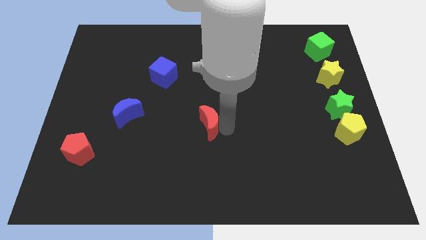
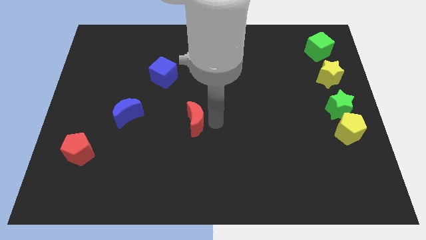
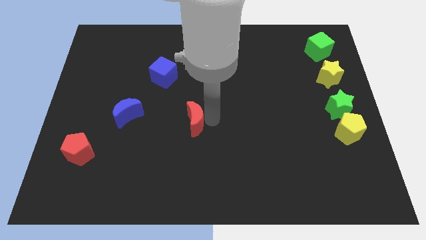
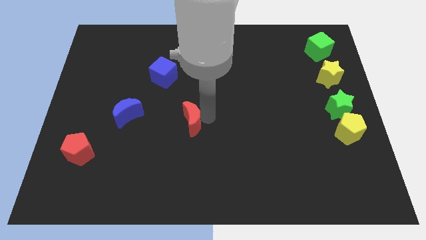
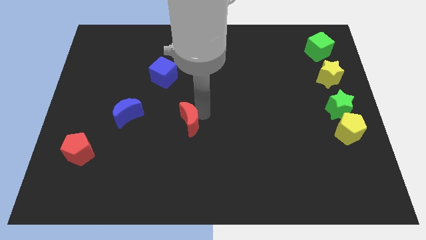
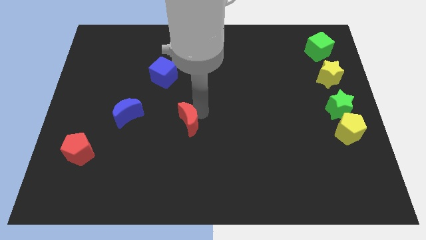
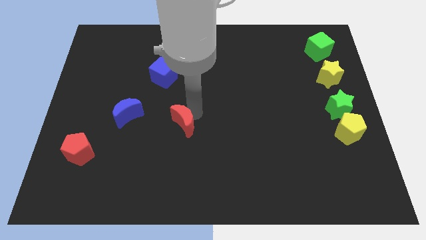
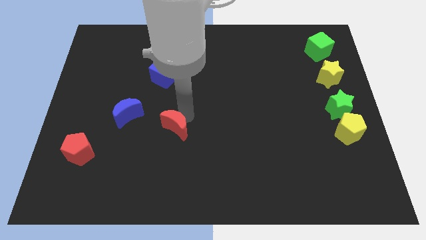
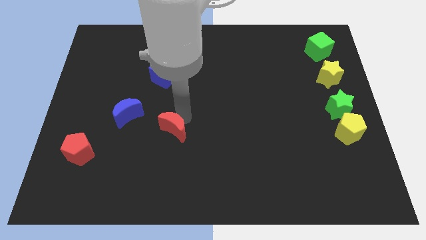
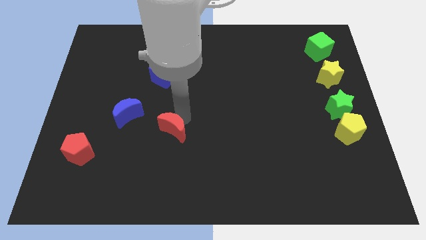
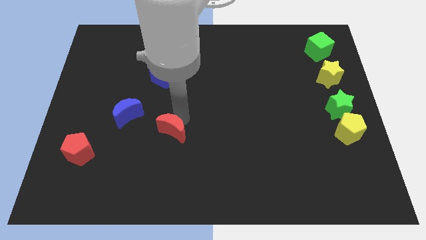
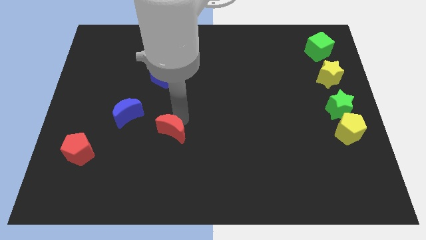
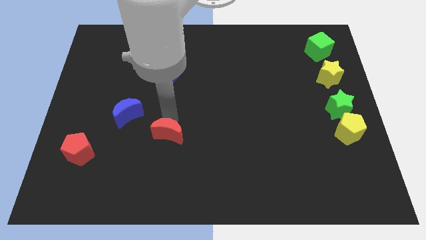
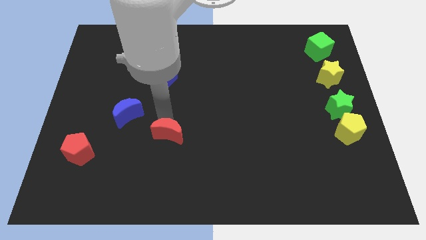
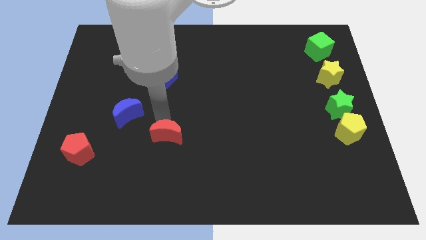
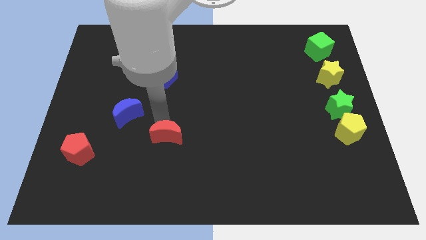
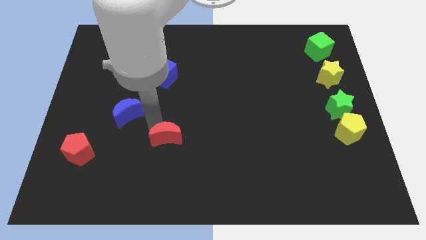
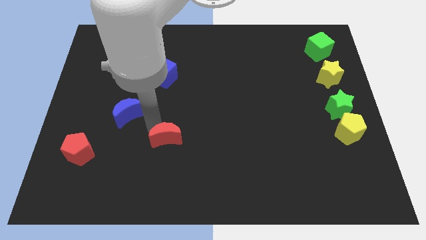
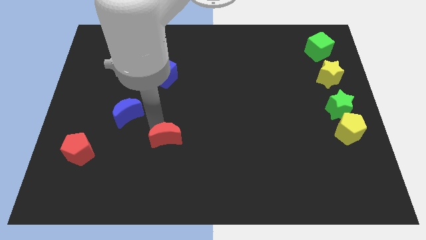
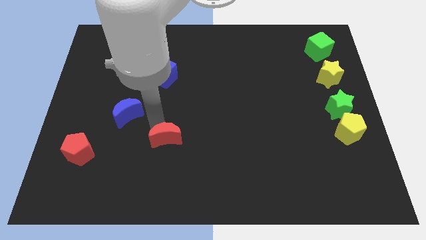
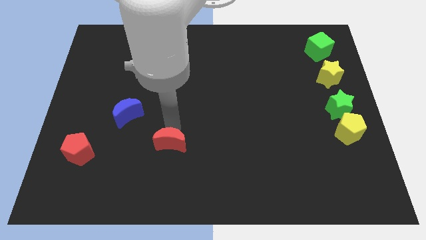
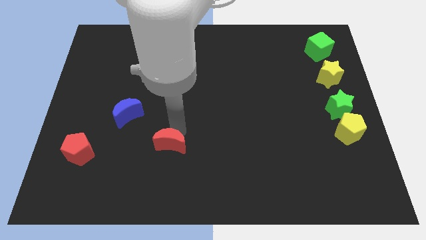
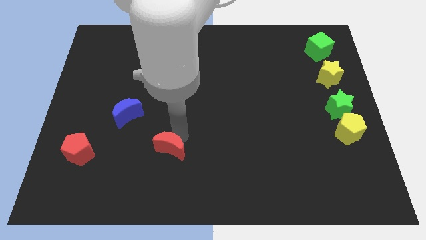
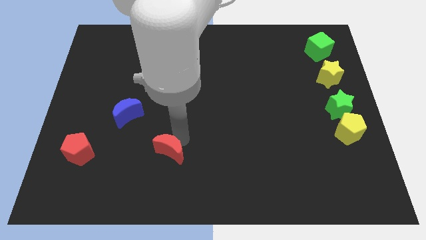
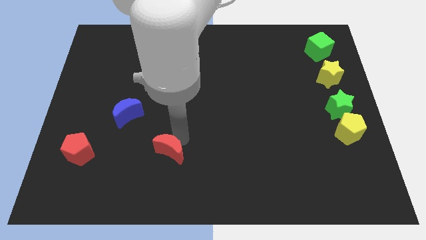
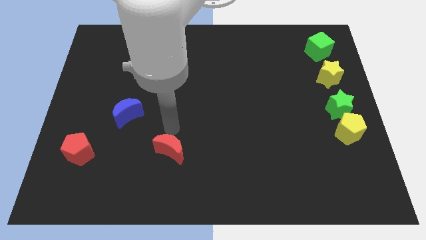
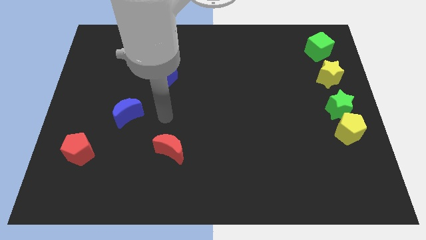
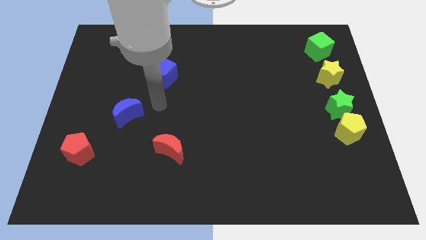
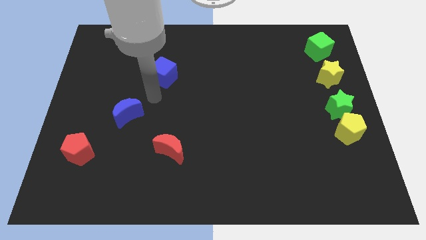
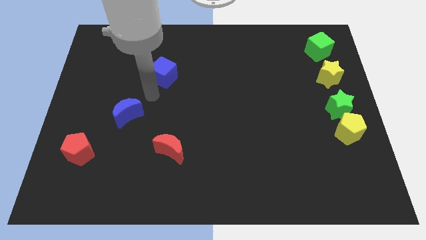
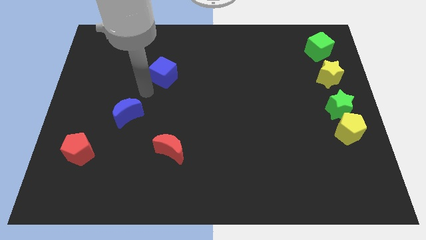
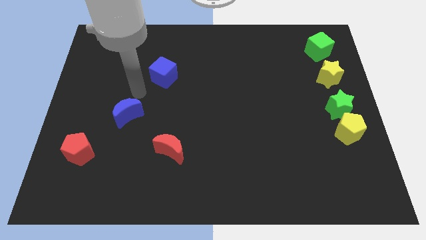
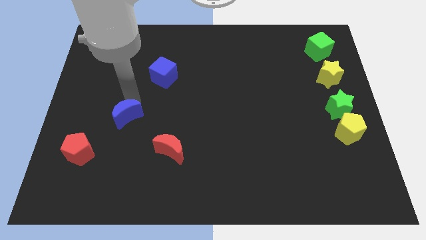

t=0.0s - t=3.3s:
move the red crescent right to red pentagon

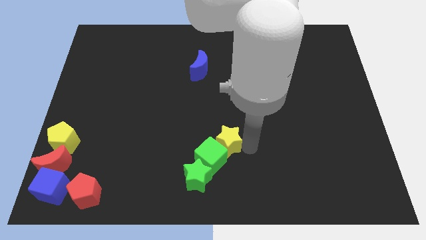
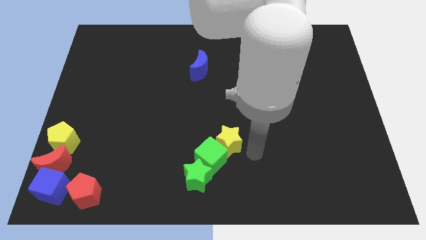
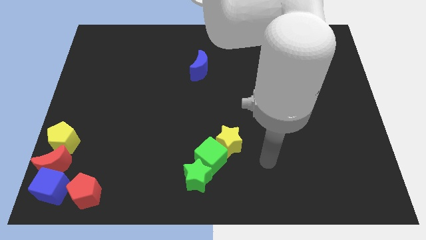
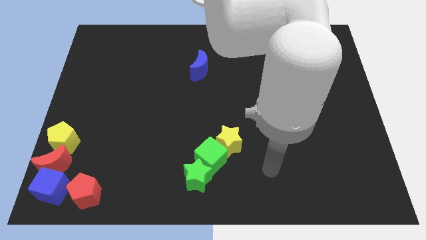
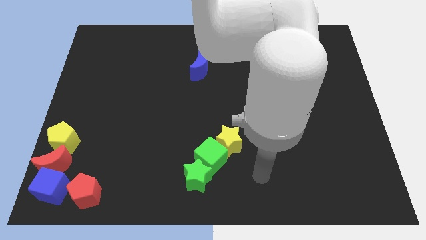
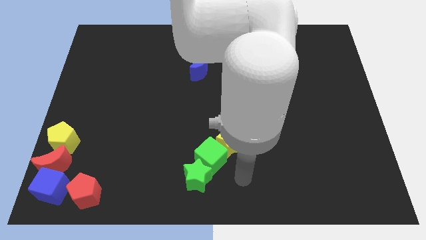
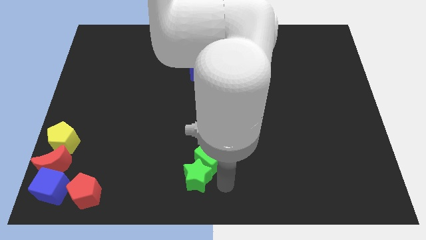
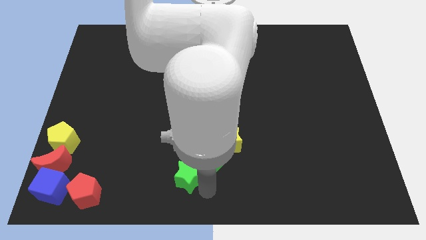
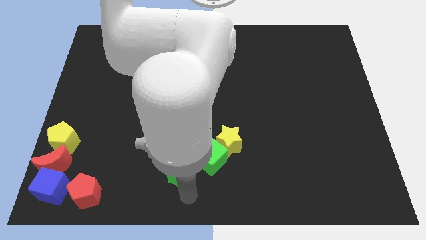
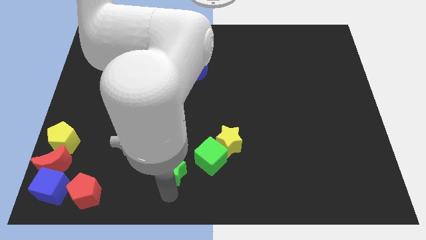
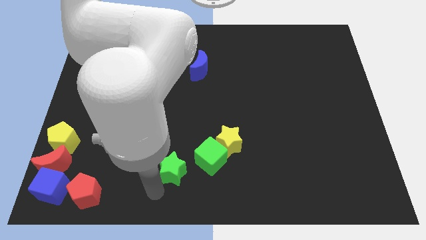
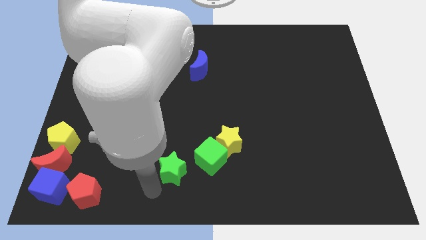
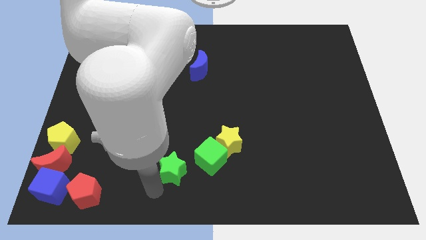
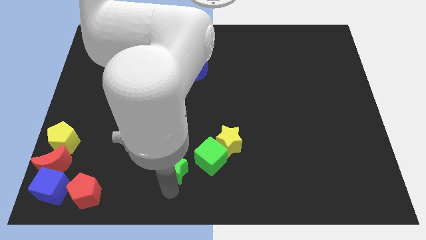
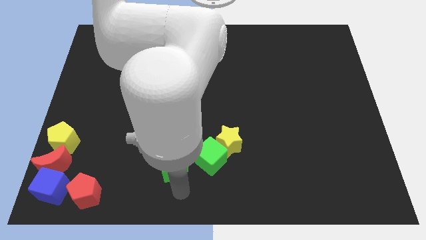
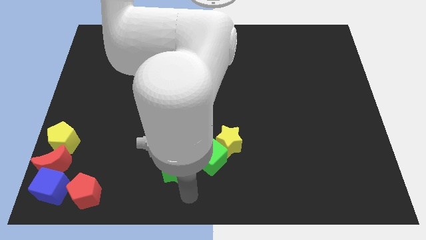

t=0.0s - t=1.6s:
separate green cube and the green star

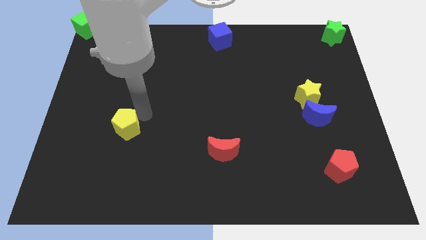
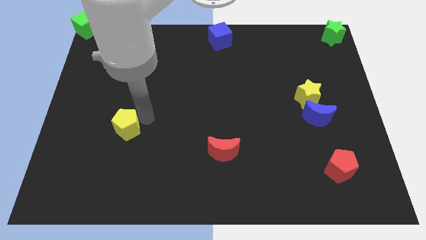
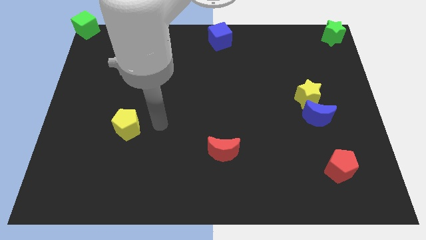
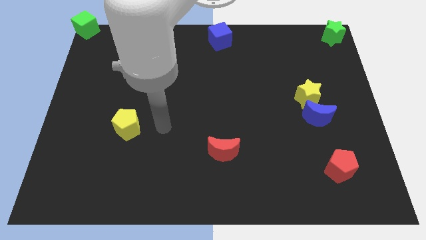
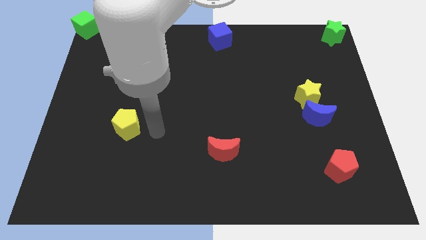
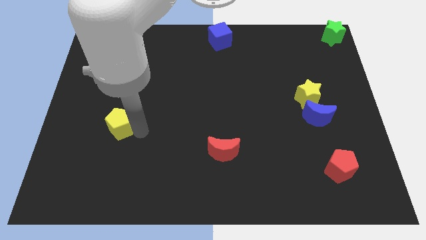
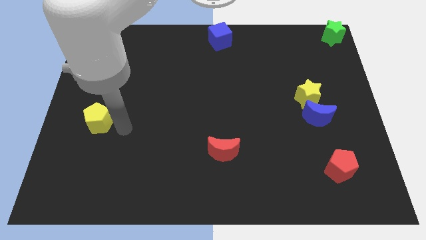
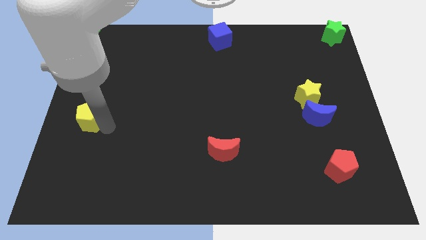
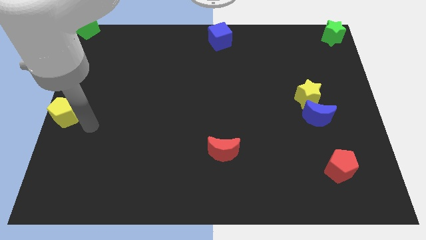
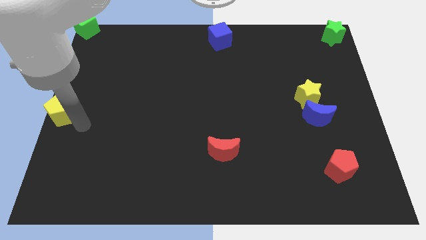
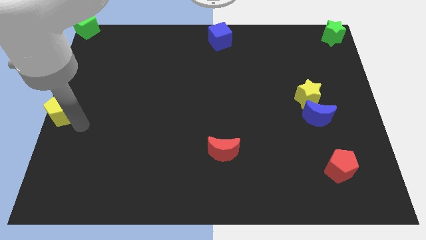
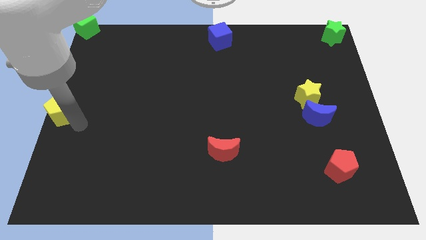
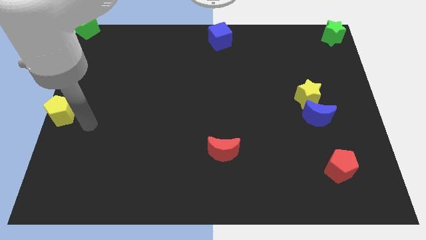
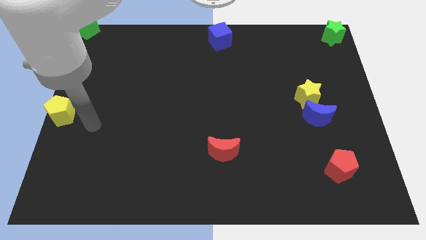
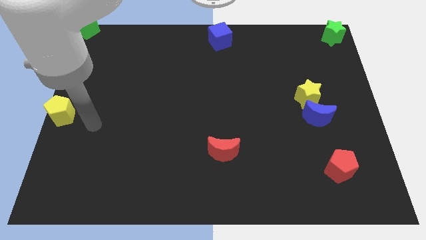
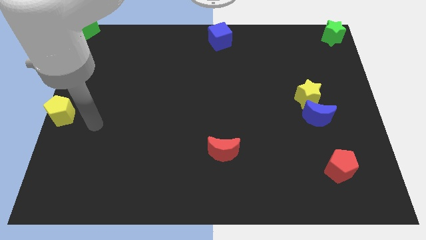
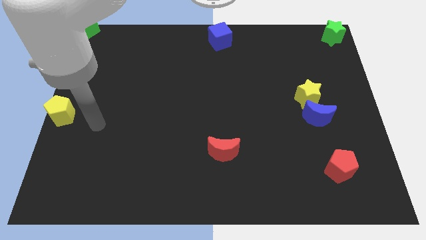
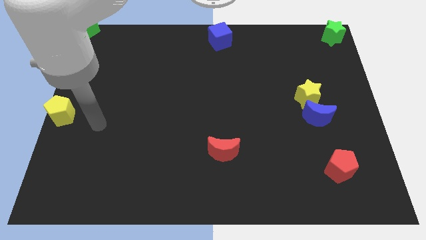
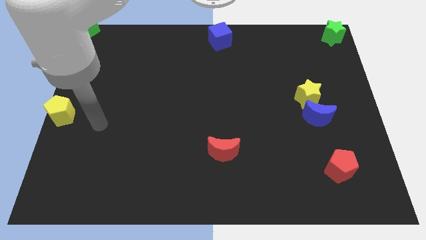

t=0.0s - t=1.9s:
place the yellow pentagon towards the left center end of the board

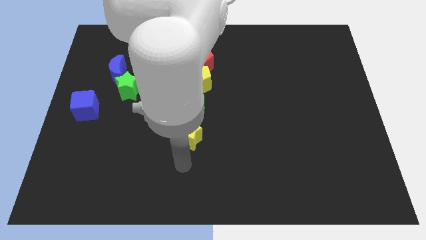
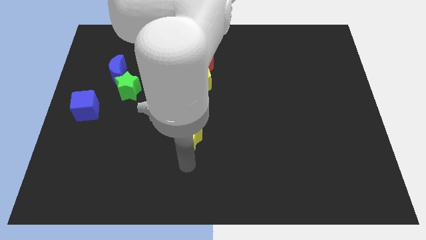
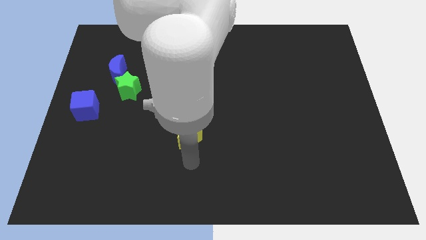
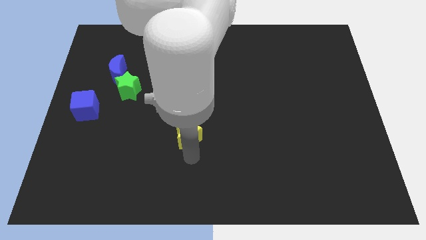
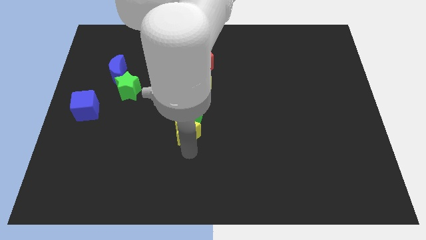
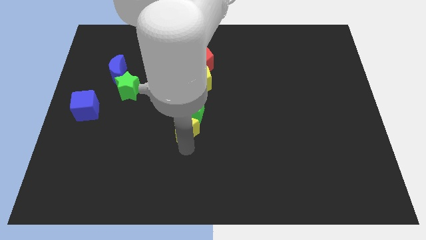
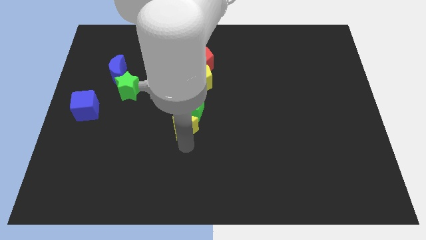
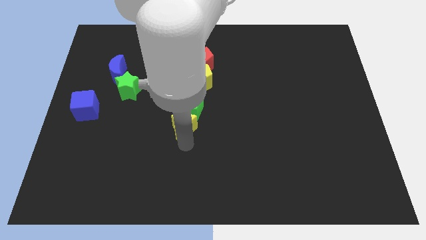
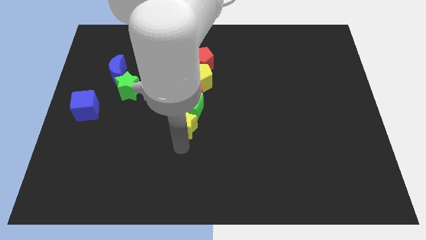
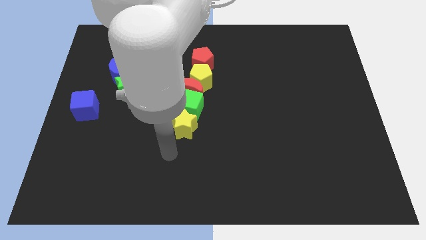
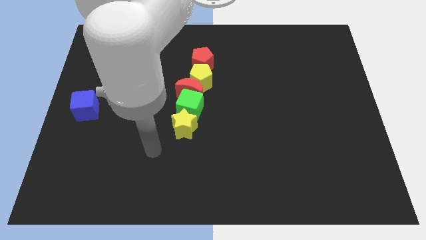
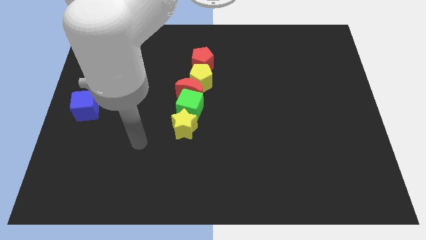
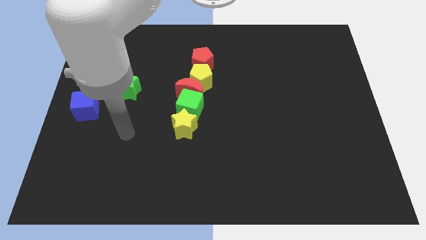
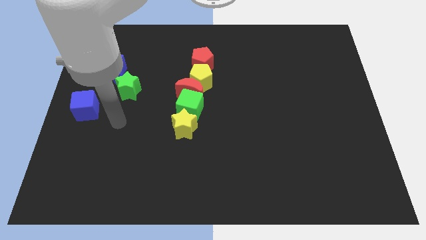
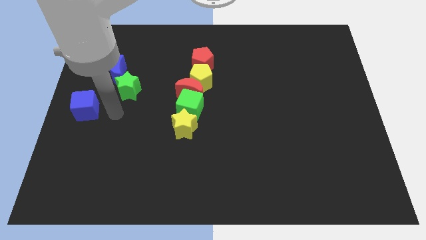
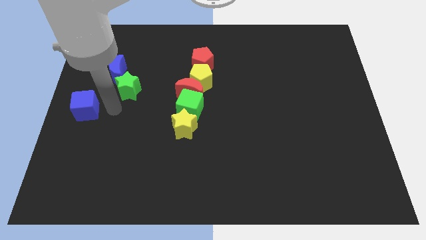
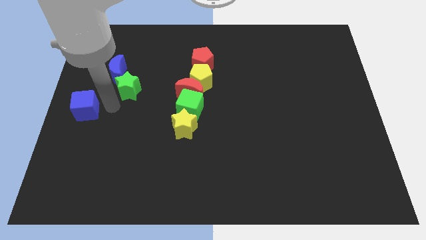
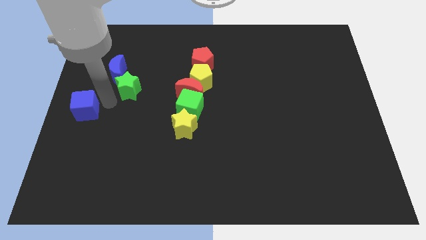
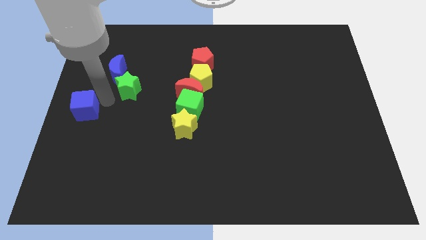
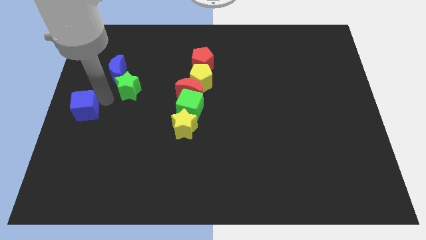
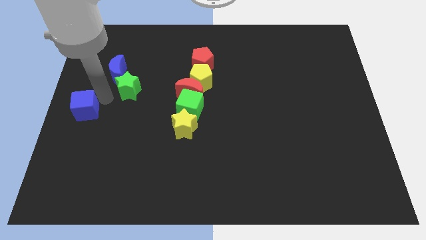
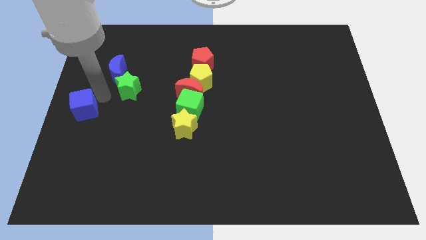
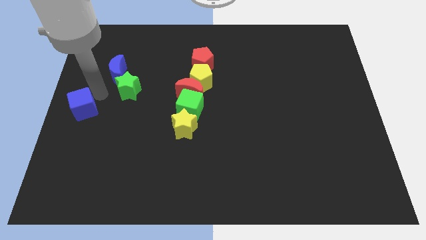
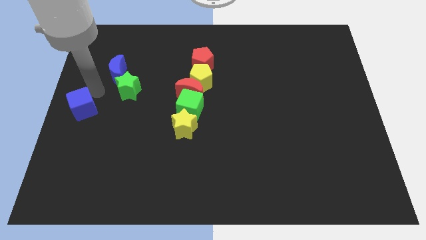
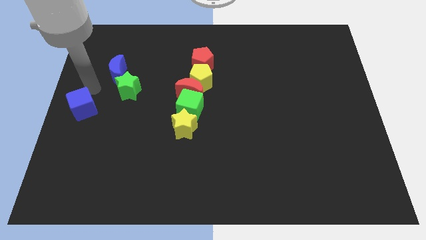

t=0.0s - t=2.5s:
move your arm away from yellow star
